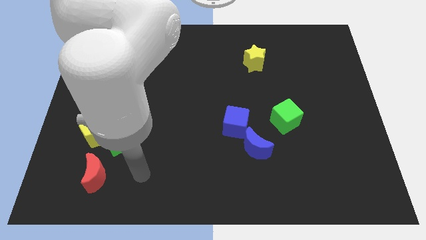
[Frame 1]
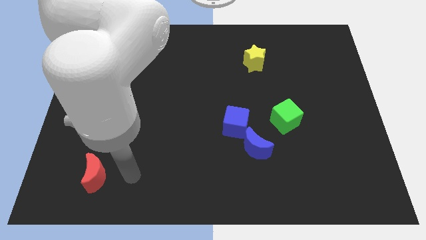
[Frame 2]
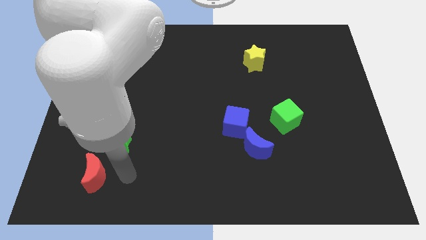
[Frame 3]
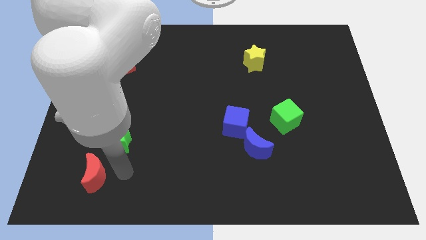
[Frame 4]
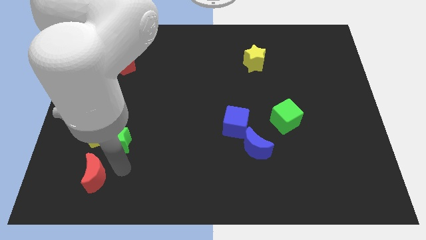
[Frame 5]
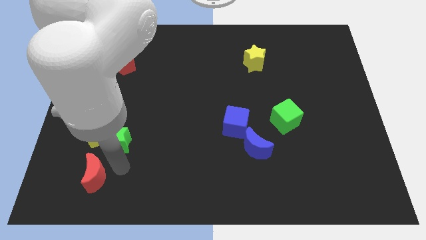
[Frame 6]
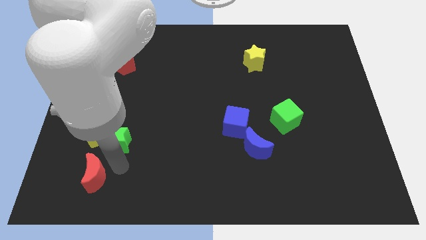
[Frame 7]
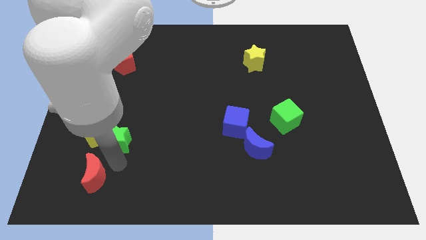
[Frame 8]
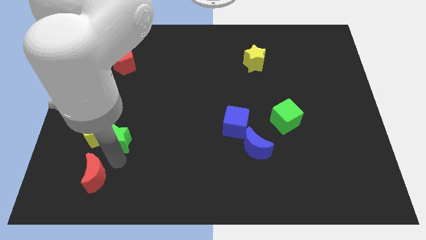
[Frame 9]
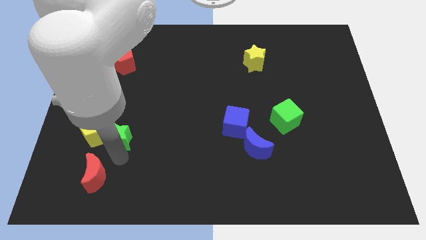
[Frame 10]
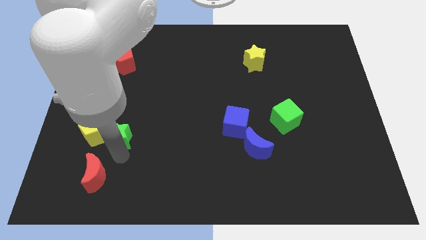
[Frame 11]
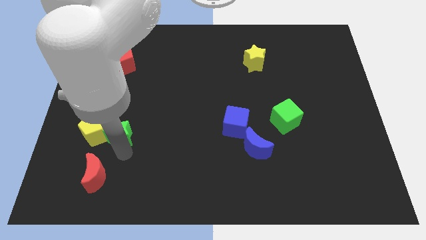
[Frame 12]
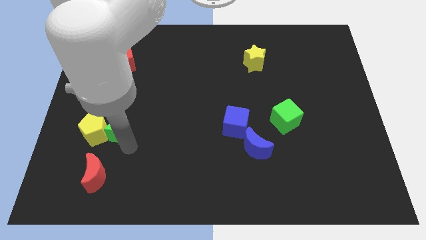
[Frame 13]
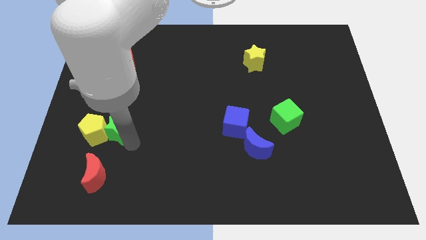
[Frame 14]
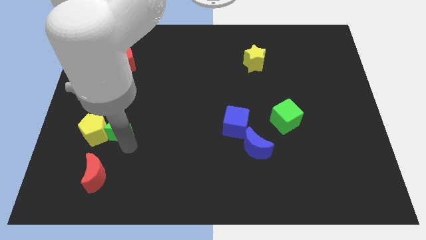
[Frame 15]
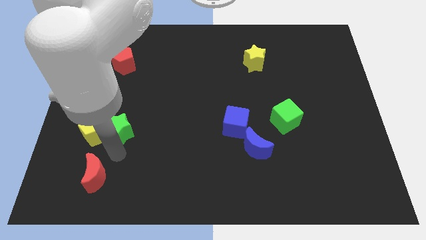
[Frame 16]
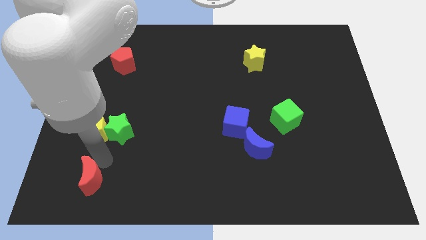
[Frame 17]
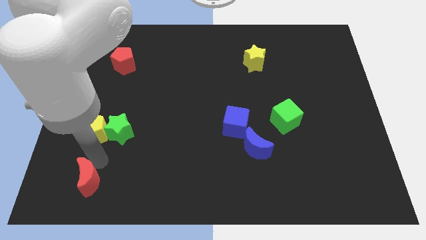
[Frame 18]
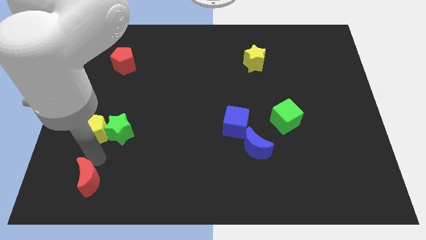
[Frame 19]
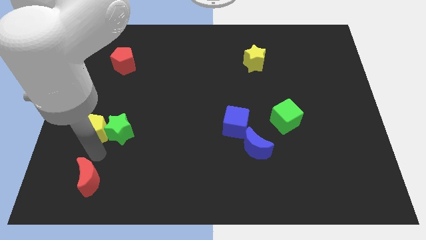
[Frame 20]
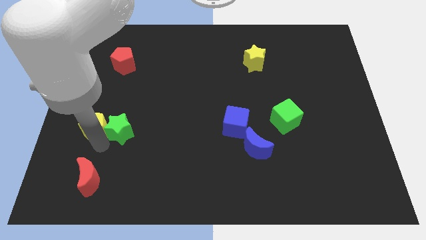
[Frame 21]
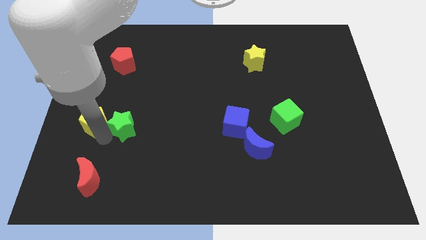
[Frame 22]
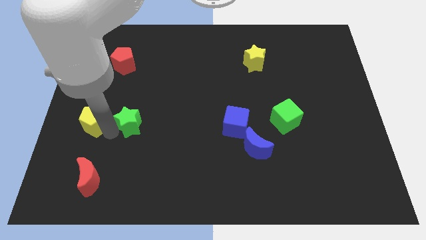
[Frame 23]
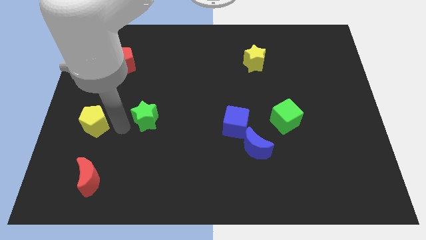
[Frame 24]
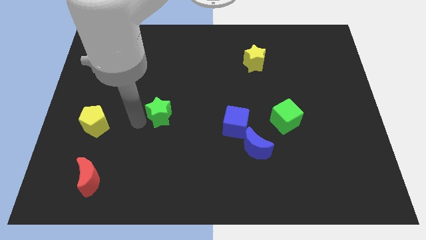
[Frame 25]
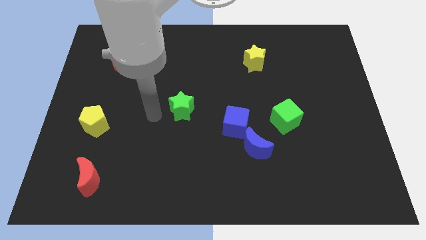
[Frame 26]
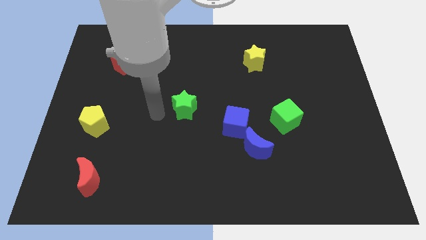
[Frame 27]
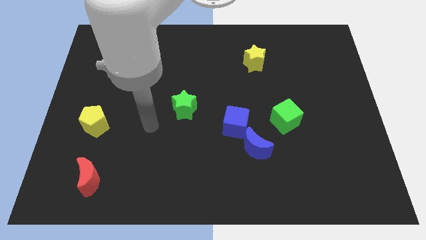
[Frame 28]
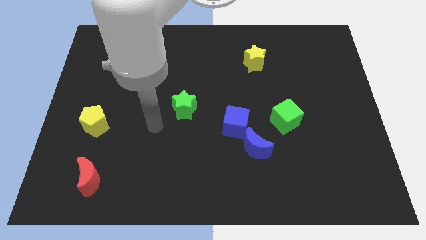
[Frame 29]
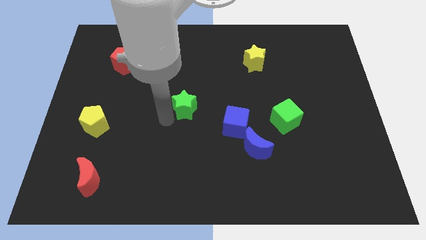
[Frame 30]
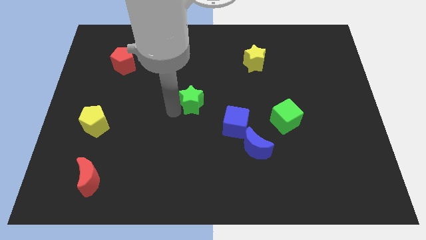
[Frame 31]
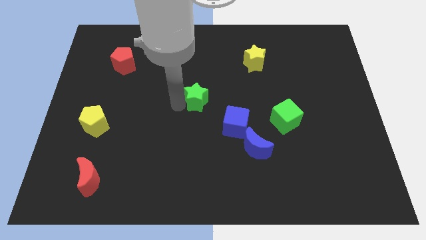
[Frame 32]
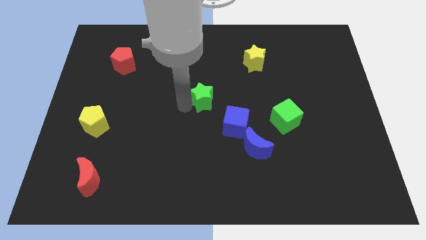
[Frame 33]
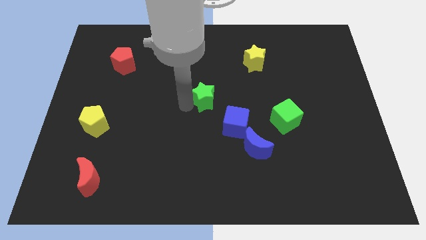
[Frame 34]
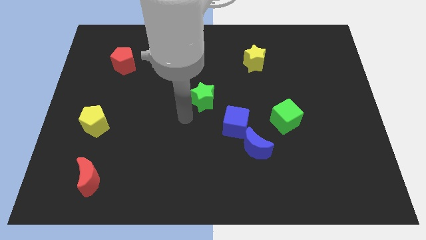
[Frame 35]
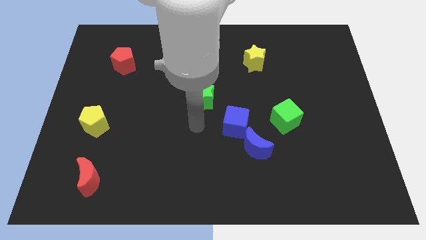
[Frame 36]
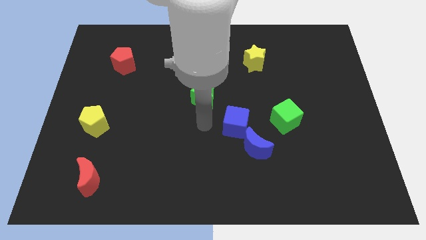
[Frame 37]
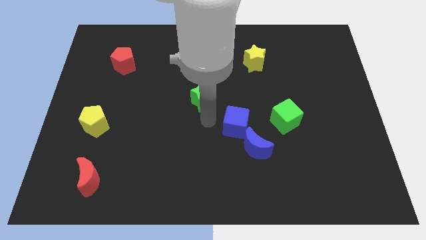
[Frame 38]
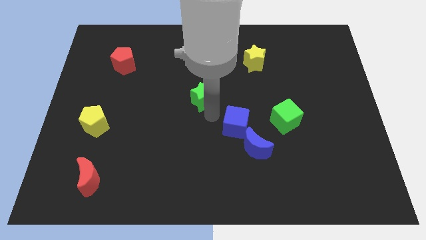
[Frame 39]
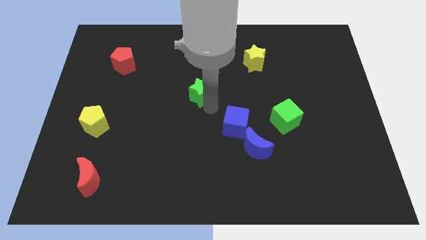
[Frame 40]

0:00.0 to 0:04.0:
push the green star towards the center of the board

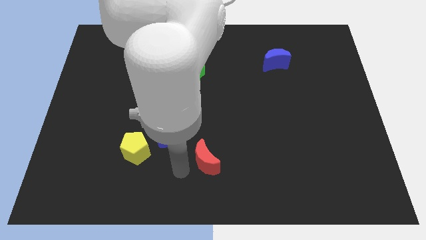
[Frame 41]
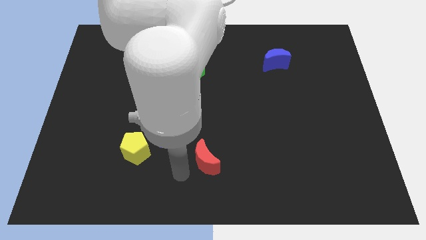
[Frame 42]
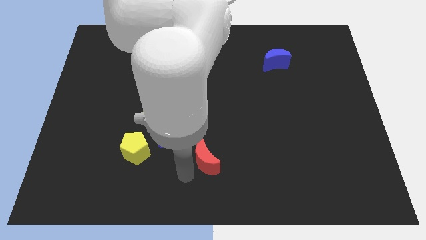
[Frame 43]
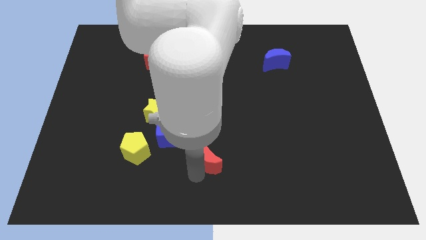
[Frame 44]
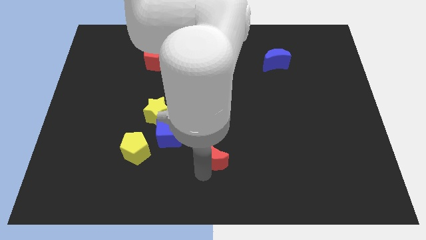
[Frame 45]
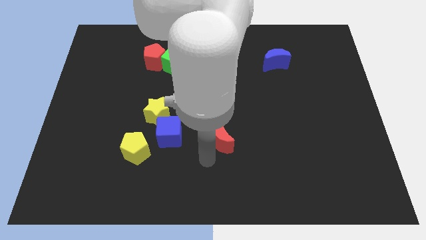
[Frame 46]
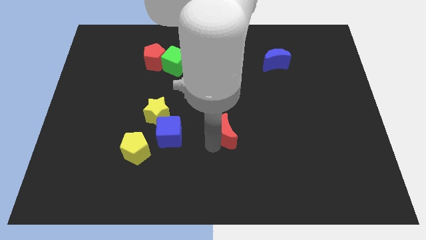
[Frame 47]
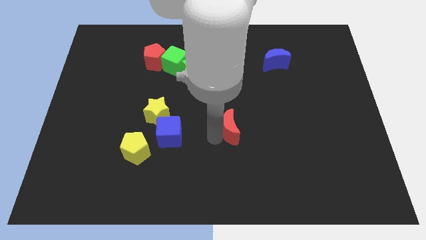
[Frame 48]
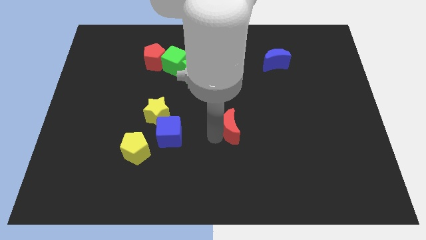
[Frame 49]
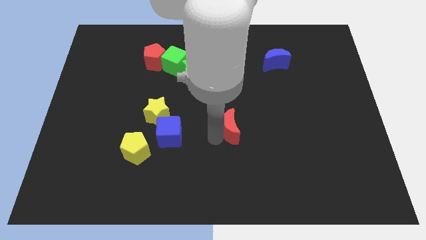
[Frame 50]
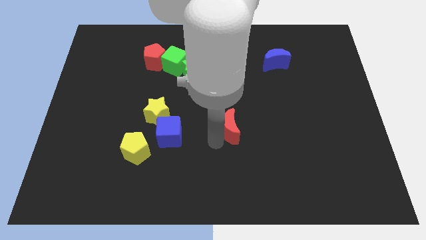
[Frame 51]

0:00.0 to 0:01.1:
separate red pentagon from blue cube

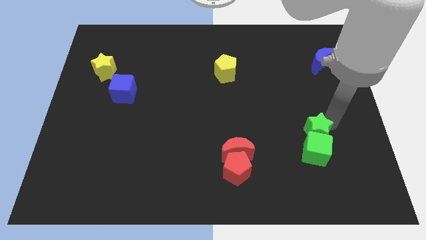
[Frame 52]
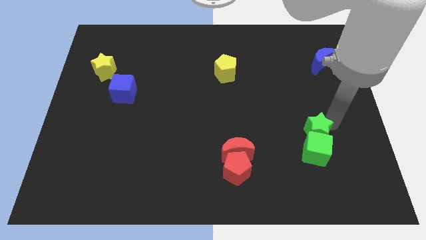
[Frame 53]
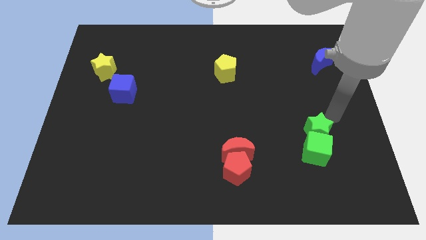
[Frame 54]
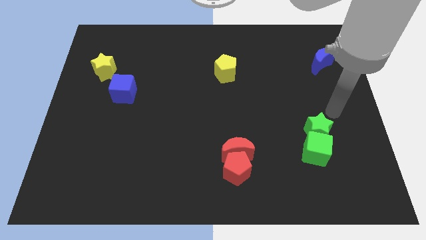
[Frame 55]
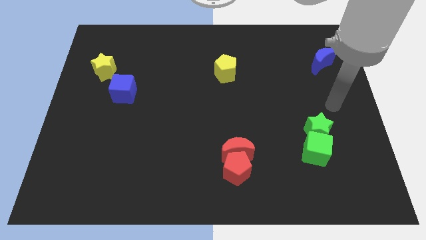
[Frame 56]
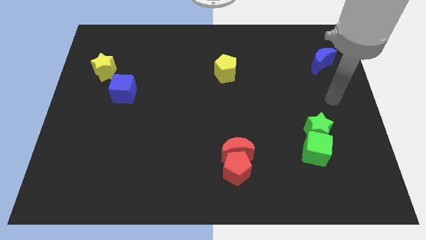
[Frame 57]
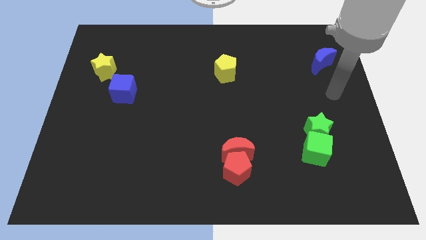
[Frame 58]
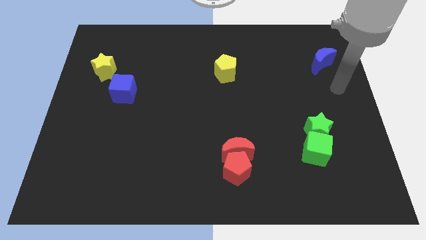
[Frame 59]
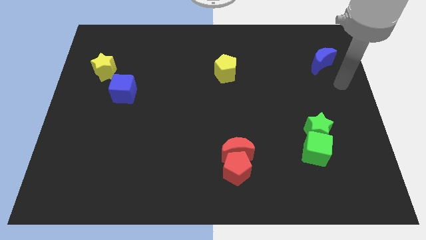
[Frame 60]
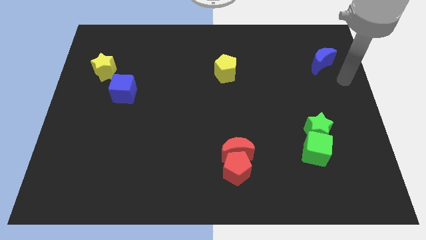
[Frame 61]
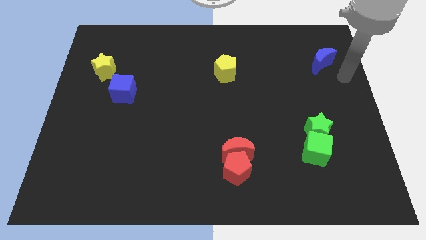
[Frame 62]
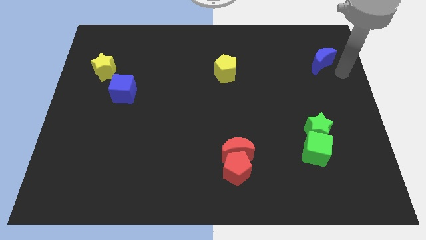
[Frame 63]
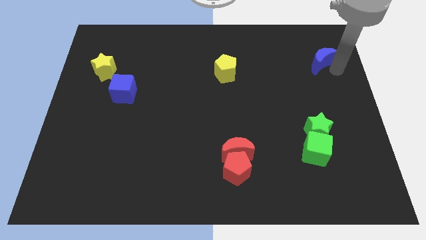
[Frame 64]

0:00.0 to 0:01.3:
move your arm away from the green star

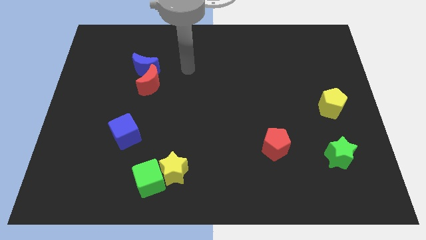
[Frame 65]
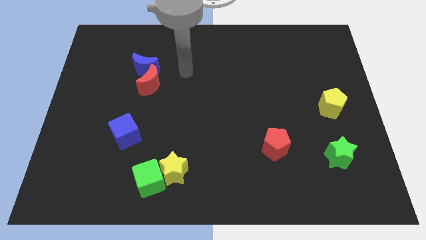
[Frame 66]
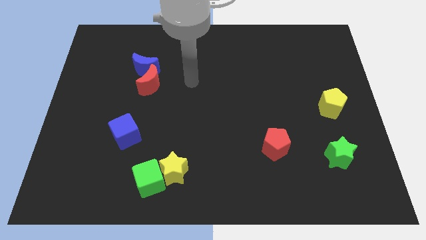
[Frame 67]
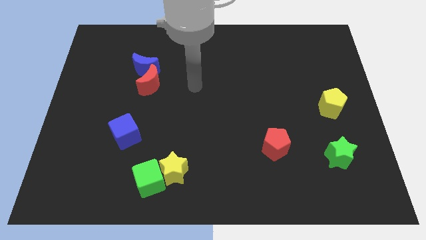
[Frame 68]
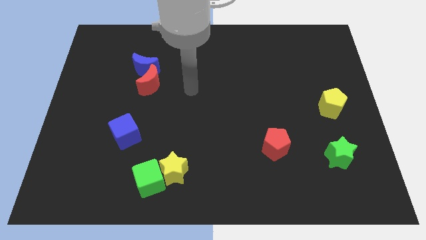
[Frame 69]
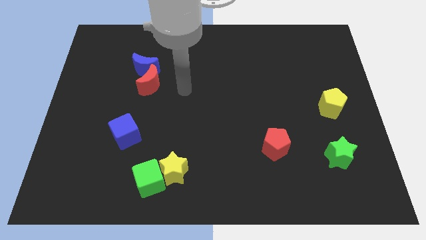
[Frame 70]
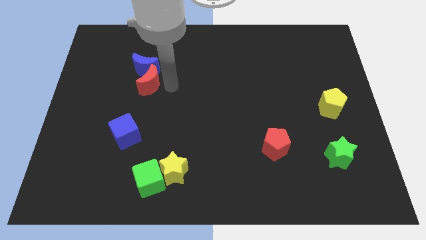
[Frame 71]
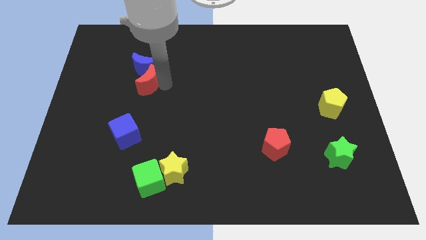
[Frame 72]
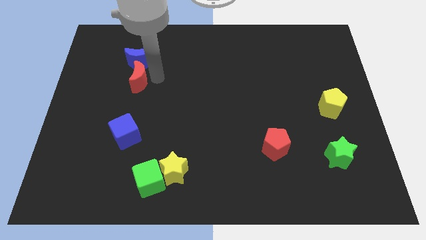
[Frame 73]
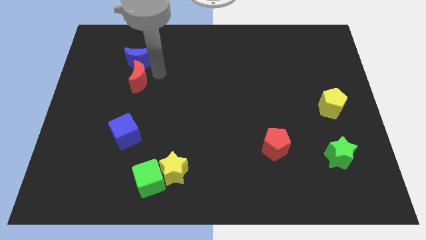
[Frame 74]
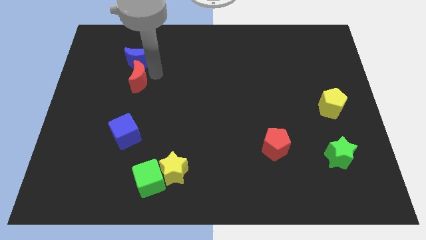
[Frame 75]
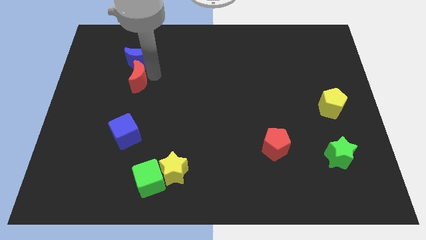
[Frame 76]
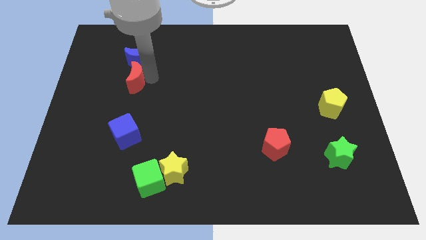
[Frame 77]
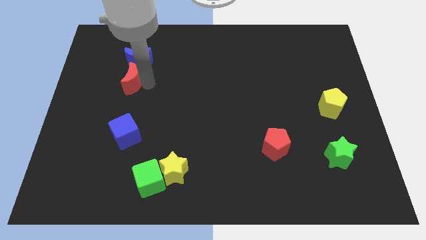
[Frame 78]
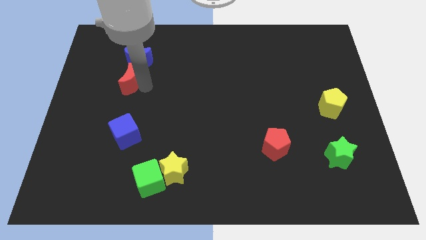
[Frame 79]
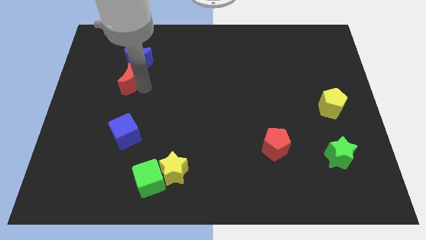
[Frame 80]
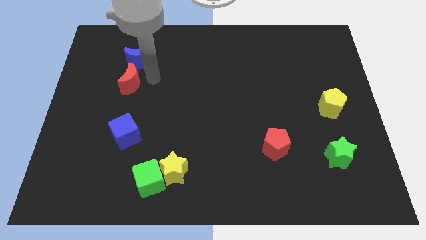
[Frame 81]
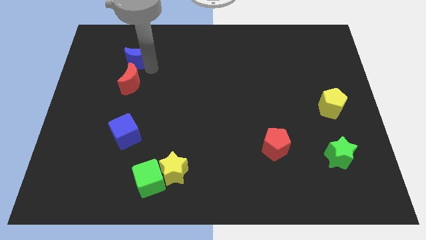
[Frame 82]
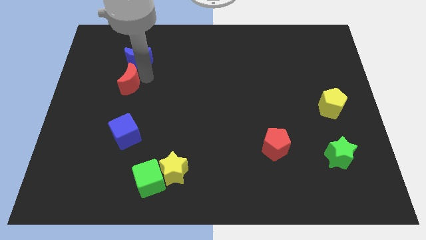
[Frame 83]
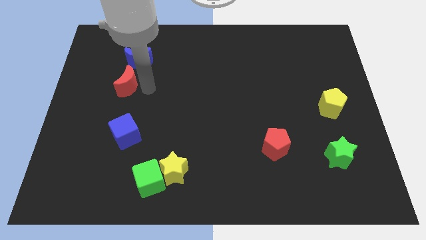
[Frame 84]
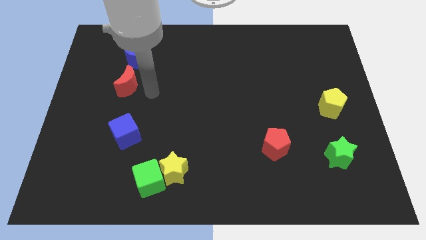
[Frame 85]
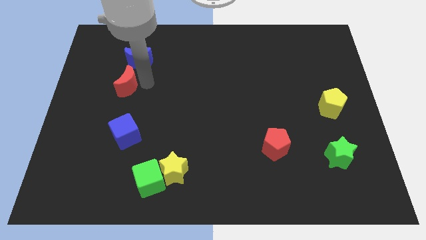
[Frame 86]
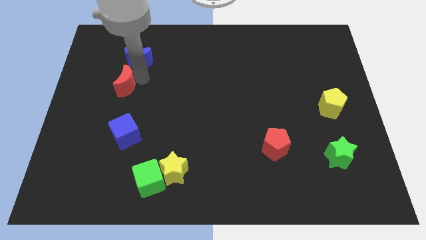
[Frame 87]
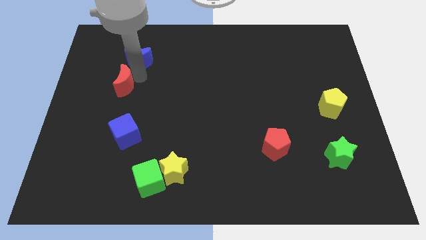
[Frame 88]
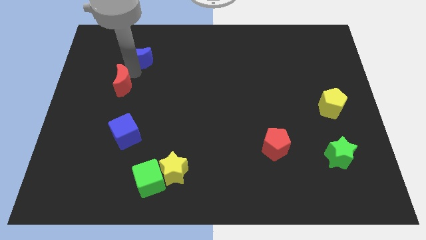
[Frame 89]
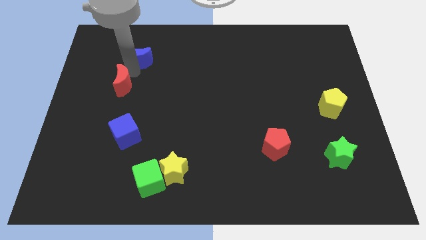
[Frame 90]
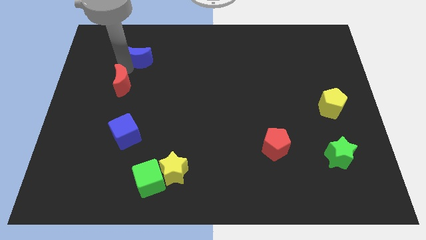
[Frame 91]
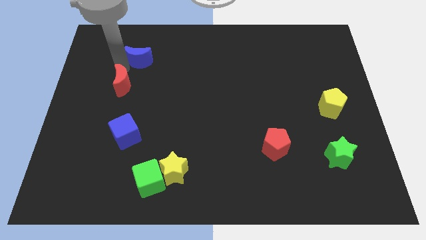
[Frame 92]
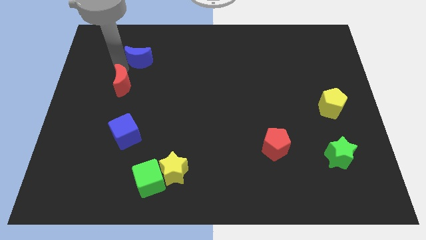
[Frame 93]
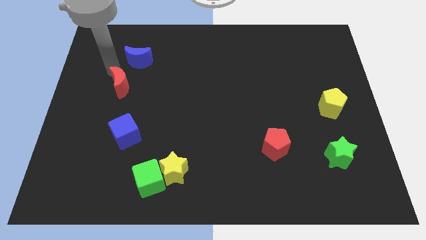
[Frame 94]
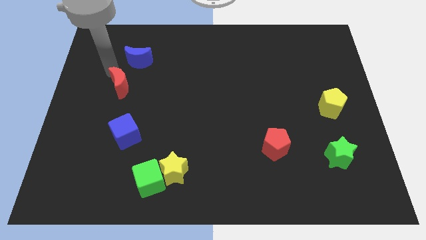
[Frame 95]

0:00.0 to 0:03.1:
separate the red crescent and blue crescent
